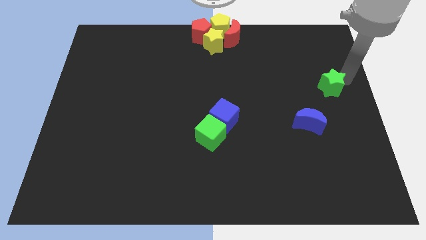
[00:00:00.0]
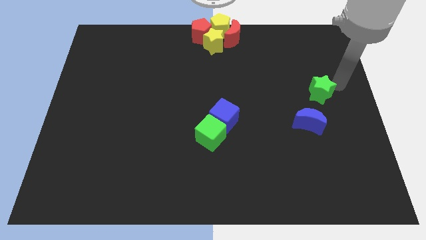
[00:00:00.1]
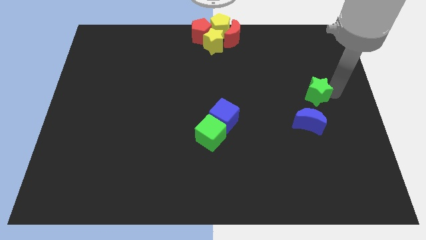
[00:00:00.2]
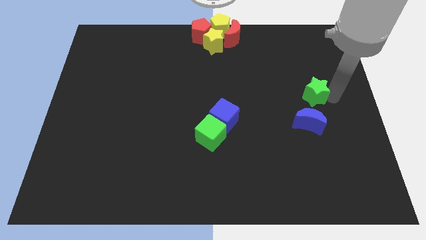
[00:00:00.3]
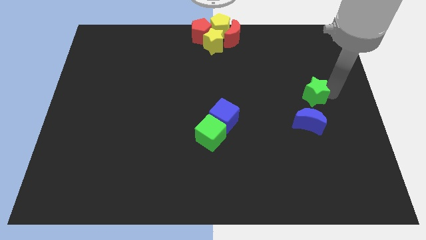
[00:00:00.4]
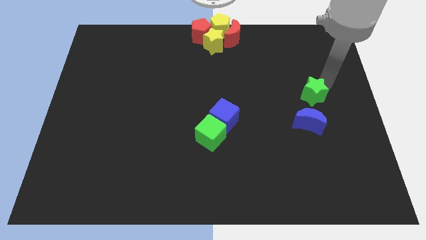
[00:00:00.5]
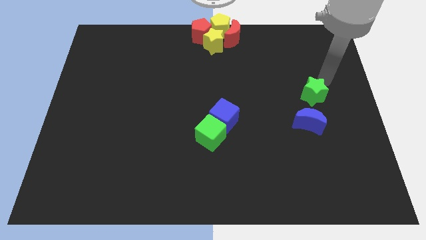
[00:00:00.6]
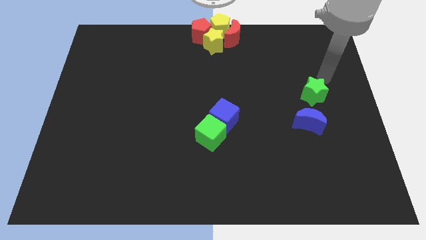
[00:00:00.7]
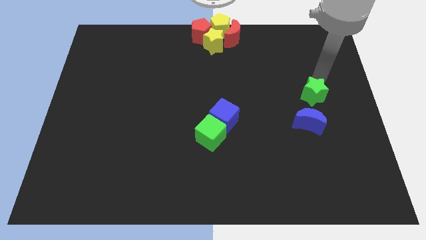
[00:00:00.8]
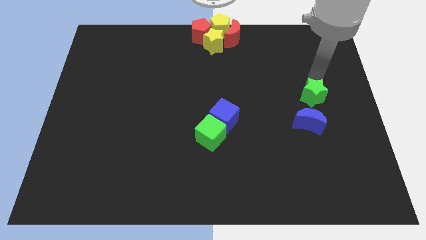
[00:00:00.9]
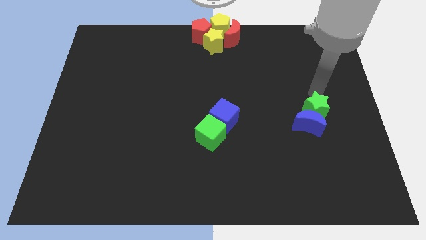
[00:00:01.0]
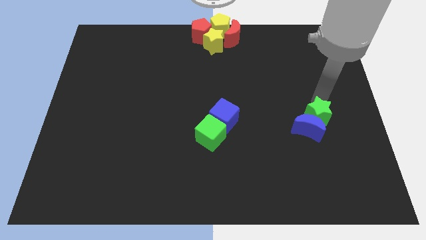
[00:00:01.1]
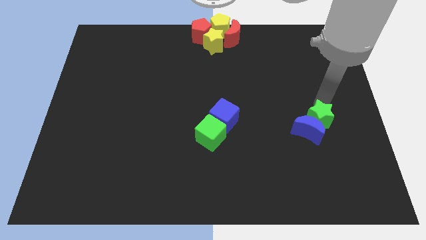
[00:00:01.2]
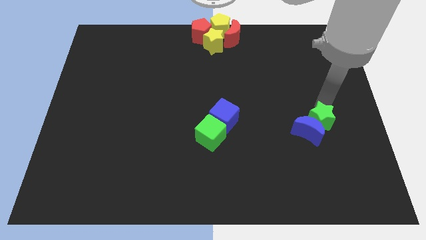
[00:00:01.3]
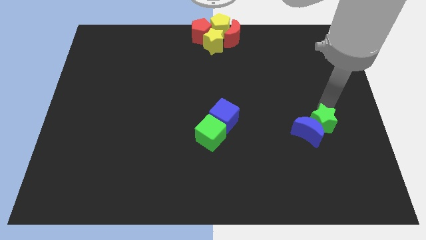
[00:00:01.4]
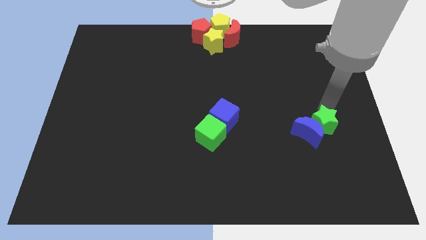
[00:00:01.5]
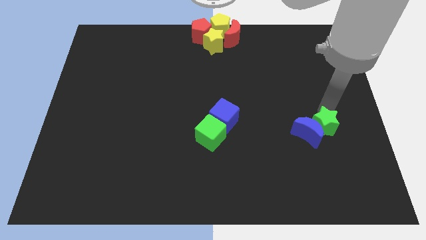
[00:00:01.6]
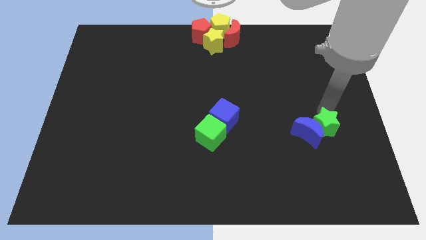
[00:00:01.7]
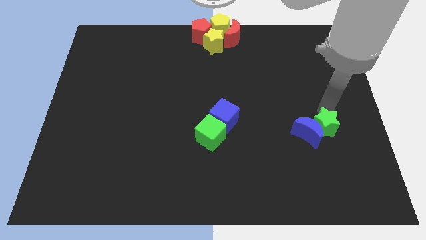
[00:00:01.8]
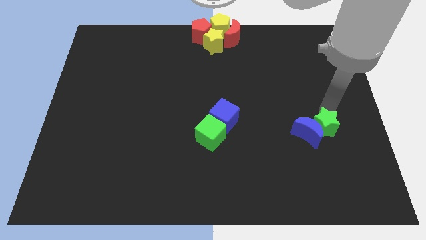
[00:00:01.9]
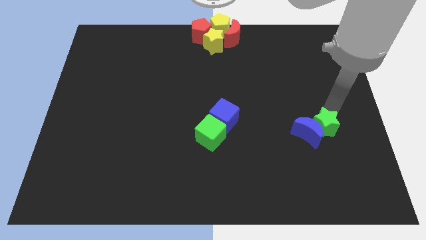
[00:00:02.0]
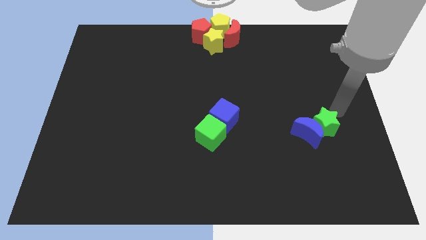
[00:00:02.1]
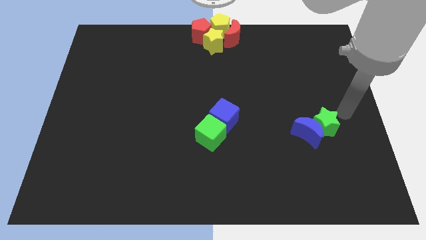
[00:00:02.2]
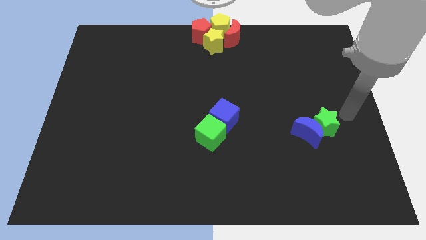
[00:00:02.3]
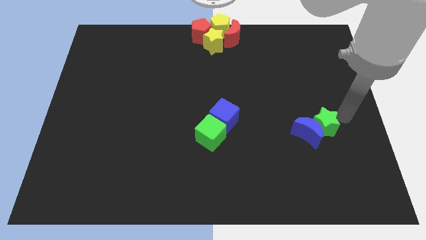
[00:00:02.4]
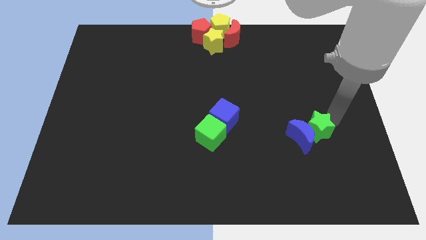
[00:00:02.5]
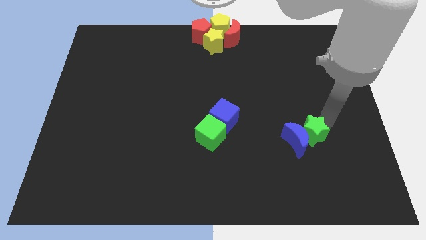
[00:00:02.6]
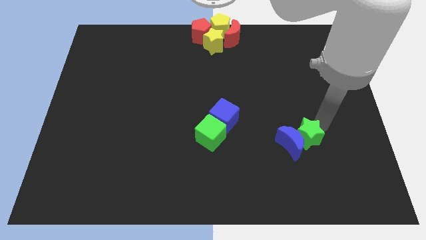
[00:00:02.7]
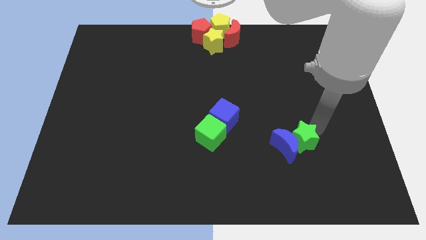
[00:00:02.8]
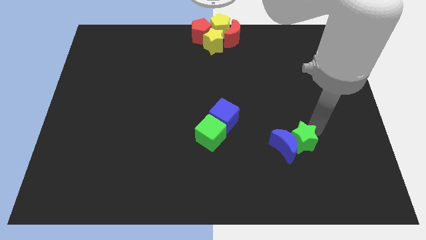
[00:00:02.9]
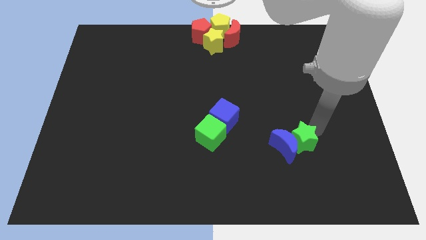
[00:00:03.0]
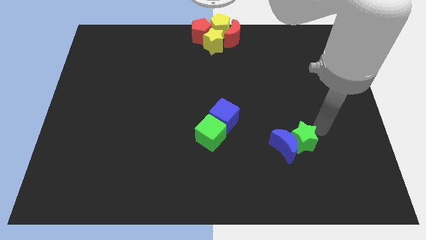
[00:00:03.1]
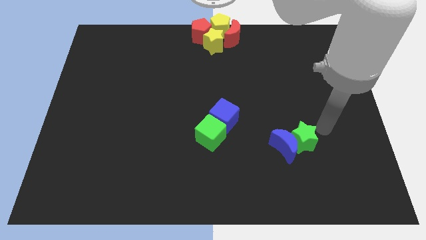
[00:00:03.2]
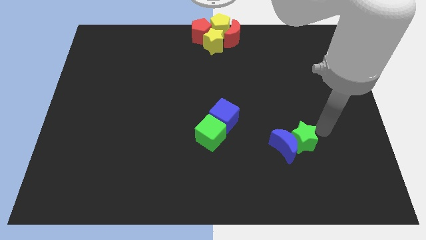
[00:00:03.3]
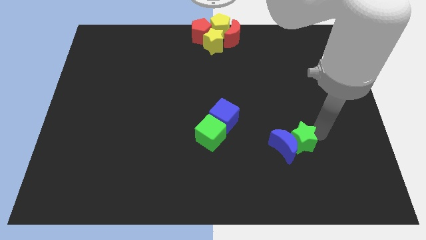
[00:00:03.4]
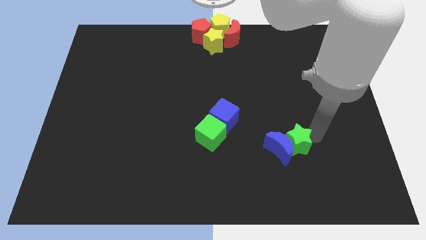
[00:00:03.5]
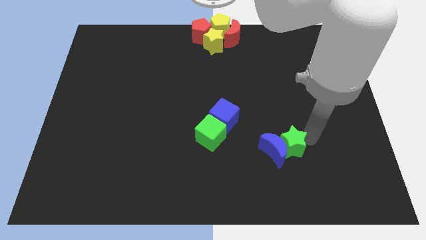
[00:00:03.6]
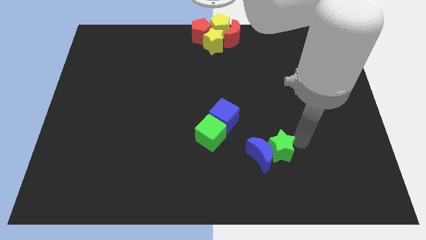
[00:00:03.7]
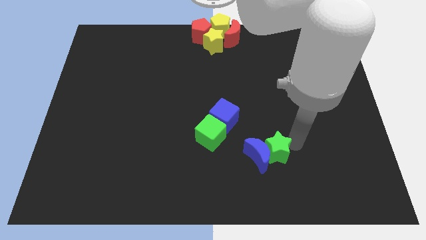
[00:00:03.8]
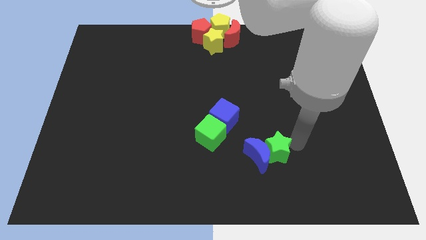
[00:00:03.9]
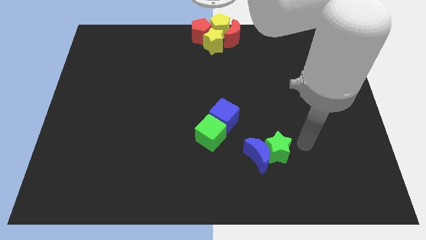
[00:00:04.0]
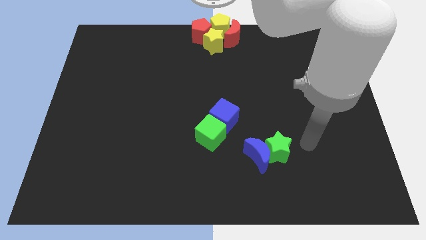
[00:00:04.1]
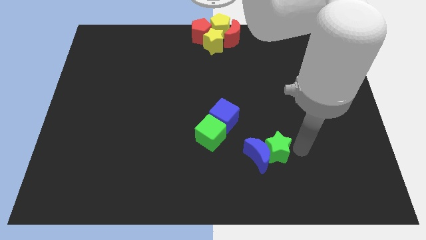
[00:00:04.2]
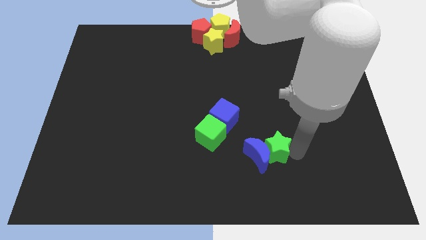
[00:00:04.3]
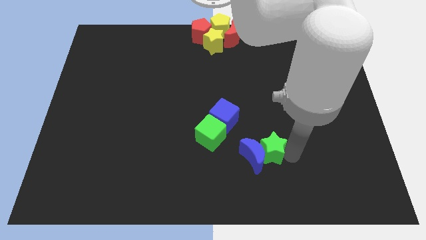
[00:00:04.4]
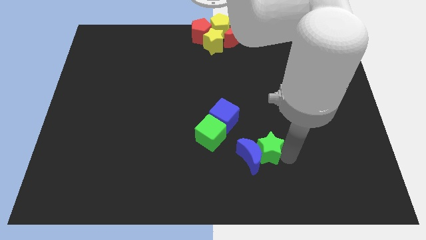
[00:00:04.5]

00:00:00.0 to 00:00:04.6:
push the green star along with the blue crescent

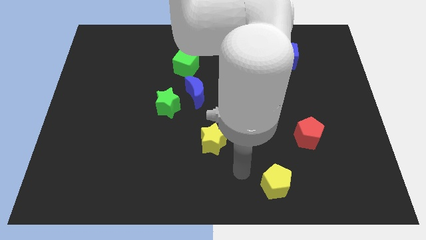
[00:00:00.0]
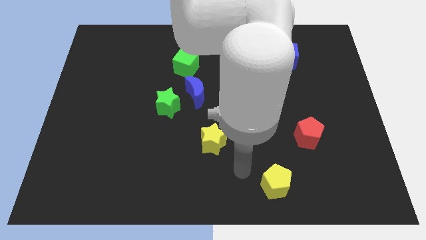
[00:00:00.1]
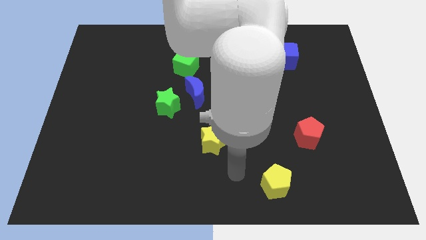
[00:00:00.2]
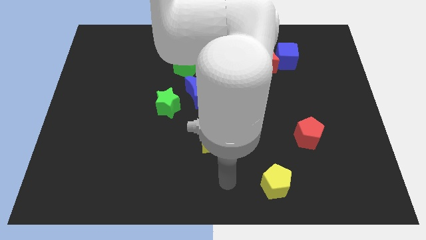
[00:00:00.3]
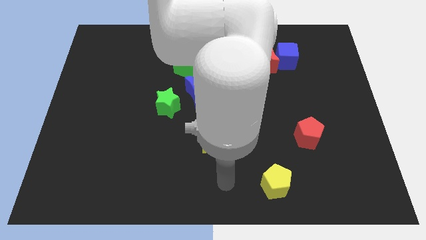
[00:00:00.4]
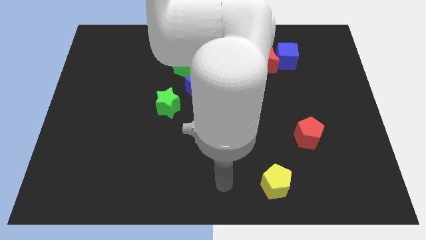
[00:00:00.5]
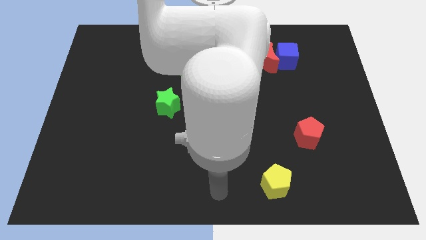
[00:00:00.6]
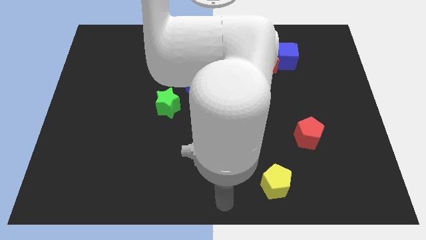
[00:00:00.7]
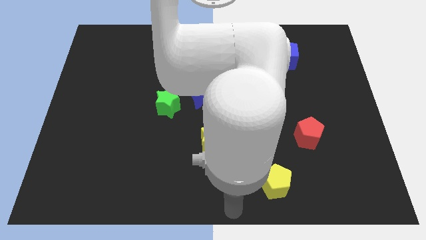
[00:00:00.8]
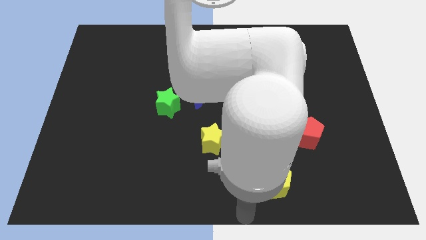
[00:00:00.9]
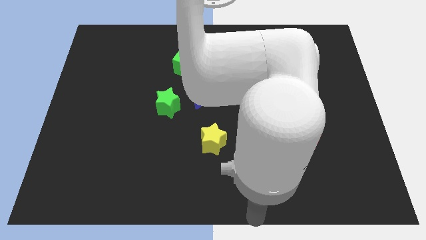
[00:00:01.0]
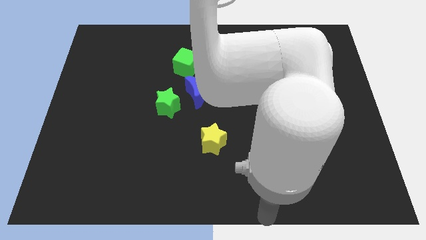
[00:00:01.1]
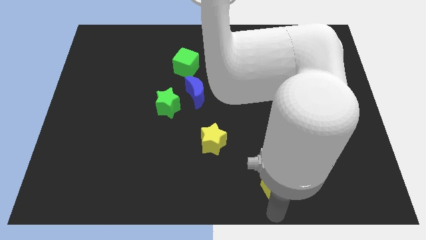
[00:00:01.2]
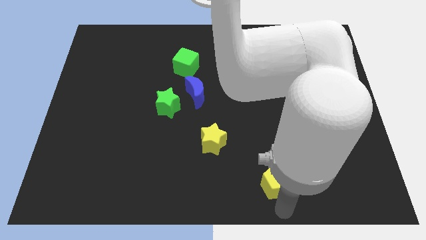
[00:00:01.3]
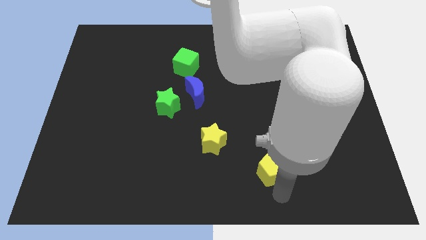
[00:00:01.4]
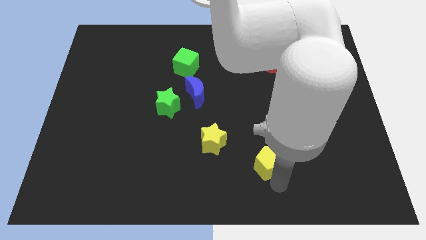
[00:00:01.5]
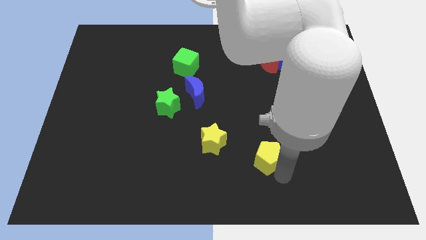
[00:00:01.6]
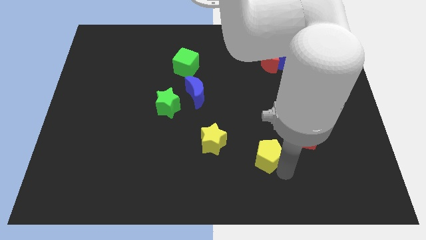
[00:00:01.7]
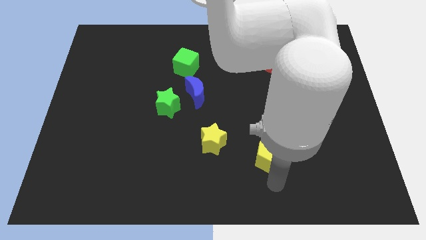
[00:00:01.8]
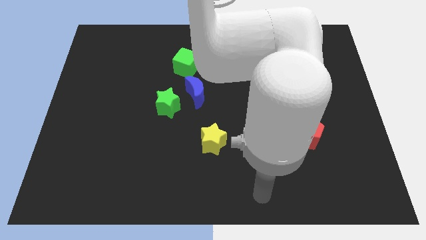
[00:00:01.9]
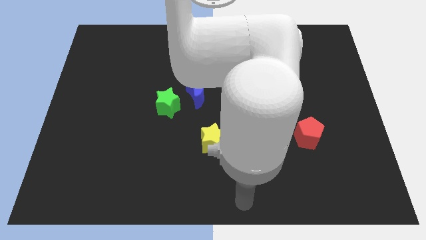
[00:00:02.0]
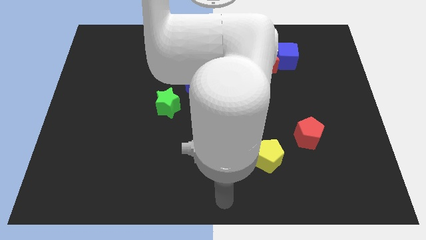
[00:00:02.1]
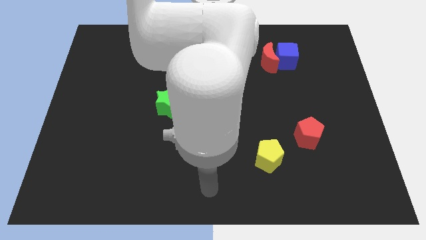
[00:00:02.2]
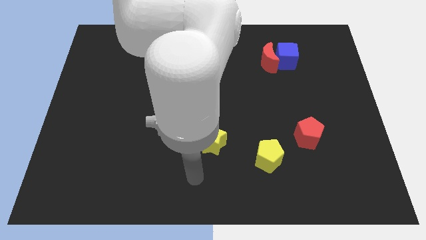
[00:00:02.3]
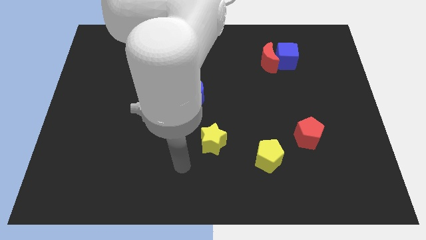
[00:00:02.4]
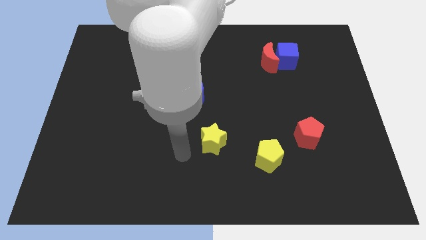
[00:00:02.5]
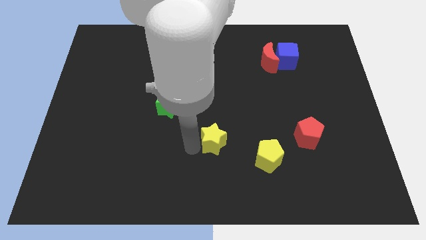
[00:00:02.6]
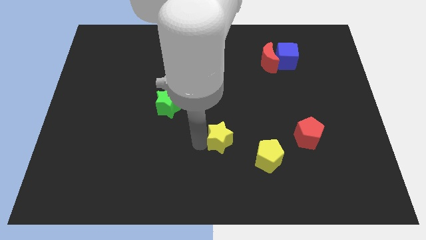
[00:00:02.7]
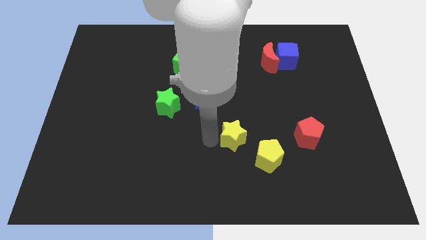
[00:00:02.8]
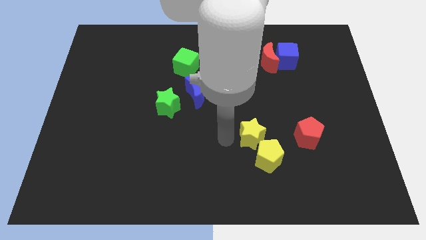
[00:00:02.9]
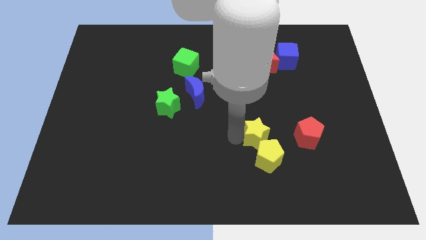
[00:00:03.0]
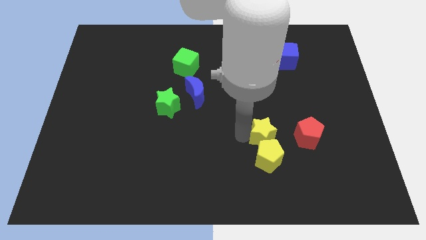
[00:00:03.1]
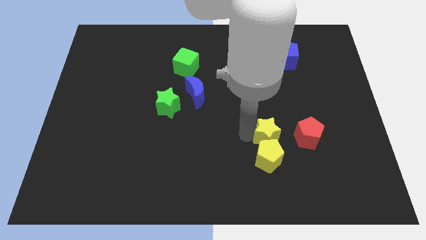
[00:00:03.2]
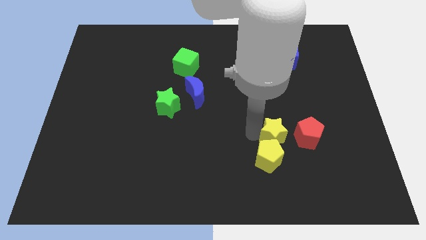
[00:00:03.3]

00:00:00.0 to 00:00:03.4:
move the yellow star above the yellow pentagon

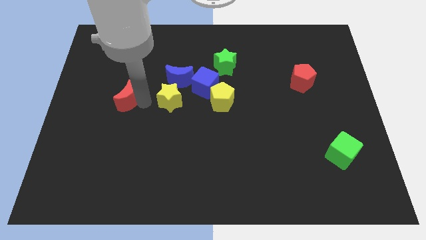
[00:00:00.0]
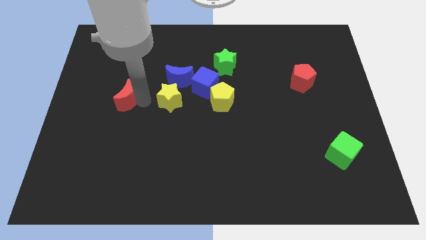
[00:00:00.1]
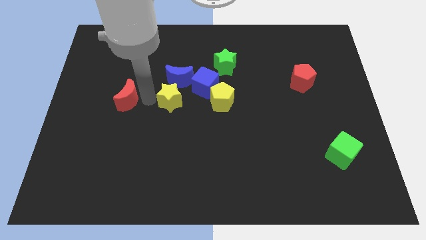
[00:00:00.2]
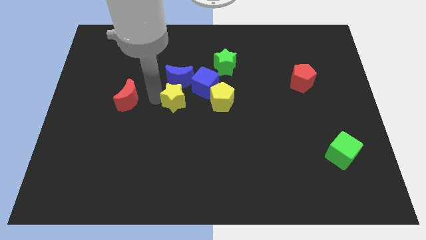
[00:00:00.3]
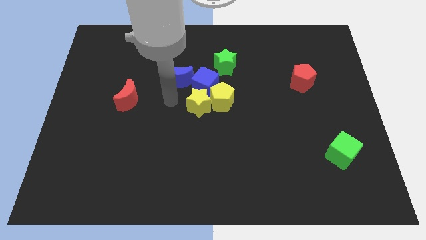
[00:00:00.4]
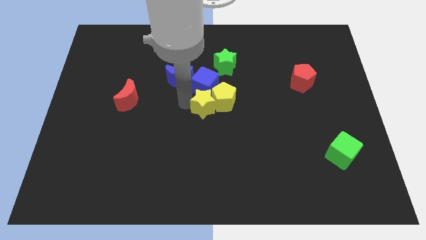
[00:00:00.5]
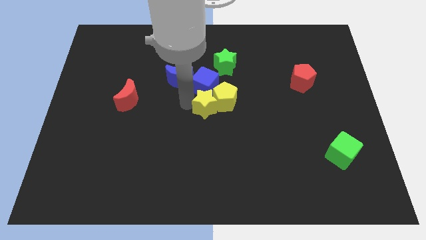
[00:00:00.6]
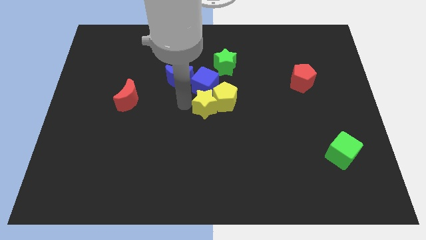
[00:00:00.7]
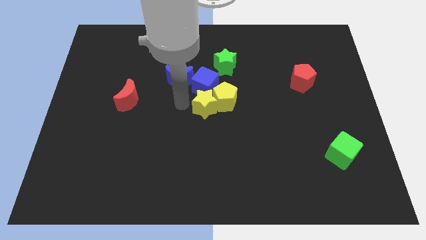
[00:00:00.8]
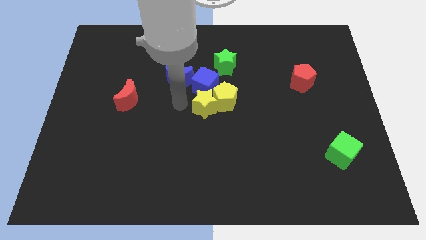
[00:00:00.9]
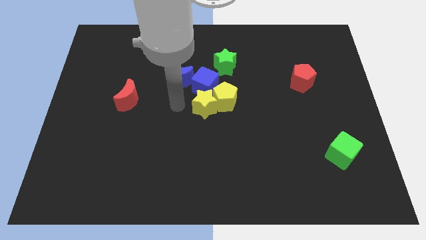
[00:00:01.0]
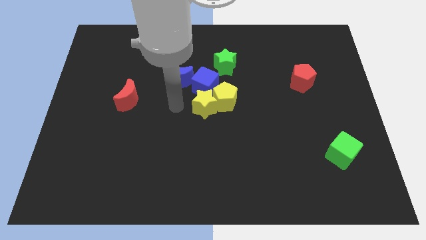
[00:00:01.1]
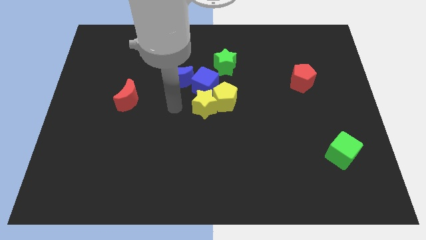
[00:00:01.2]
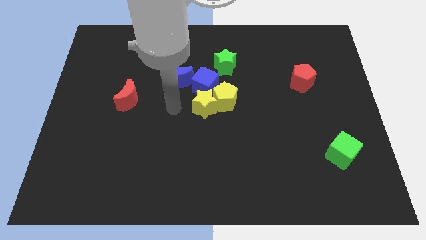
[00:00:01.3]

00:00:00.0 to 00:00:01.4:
push the yellow star into the yellow pentagon
